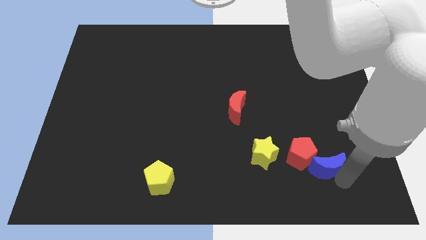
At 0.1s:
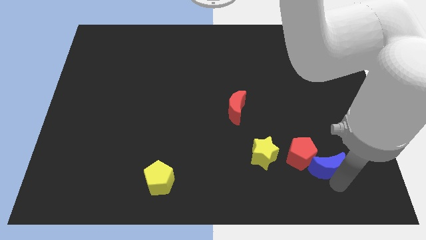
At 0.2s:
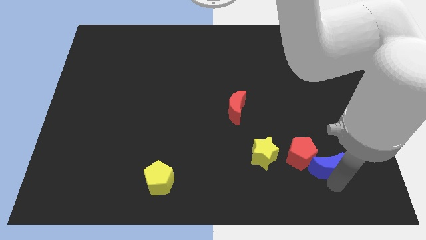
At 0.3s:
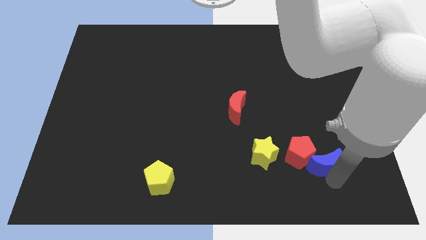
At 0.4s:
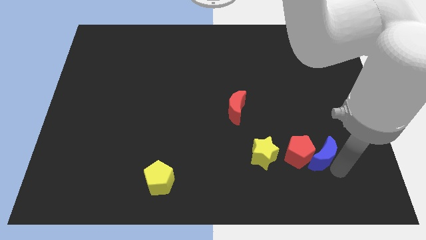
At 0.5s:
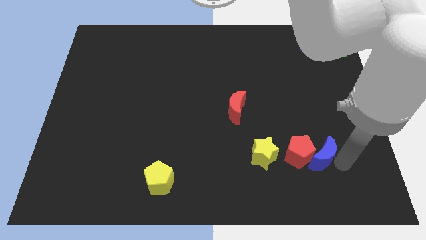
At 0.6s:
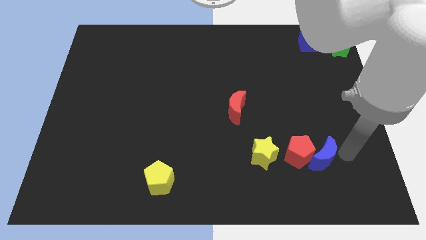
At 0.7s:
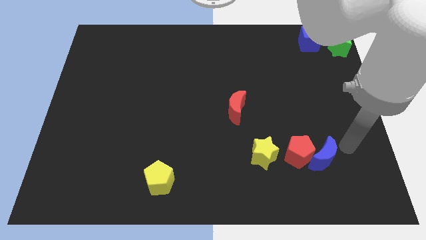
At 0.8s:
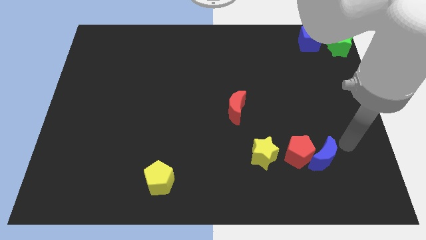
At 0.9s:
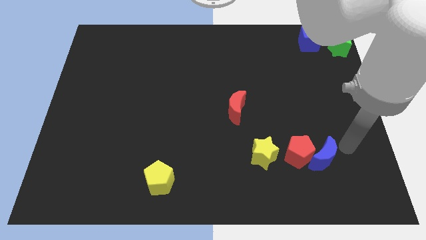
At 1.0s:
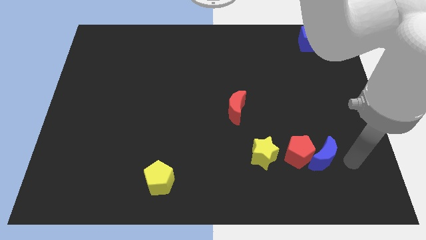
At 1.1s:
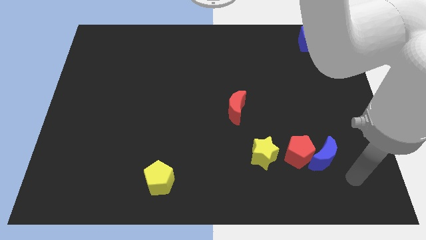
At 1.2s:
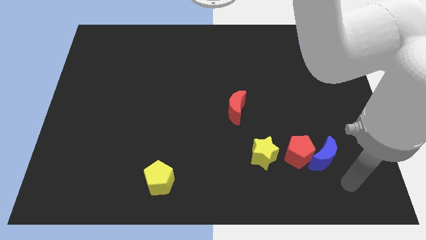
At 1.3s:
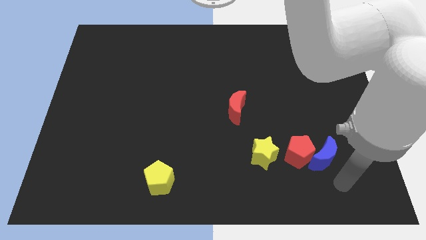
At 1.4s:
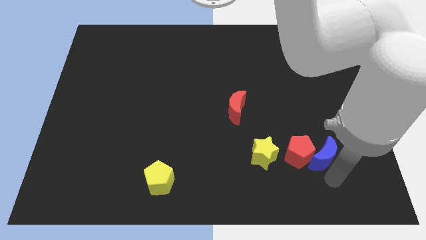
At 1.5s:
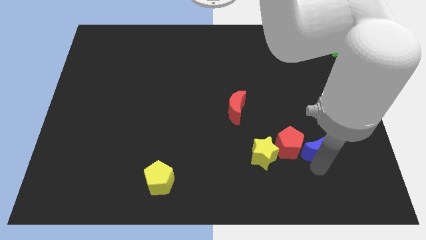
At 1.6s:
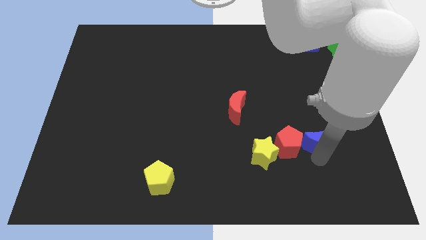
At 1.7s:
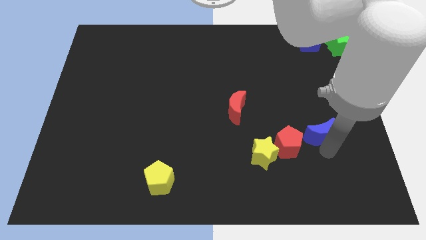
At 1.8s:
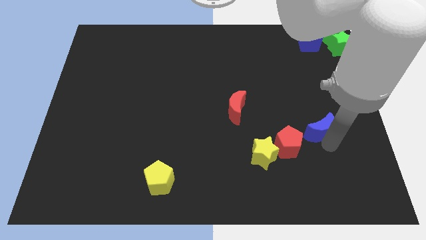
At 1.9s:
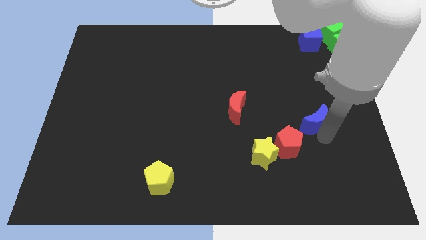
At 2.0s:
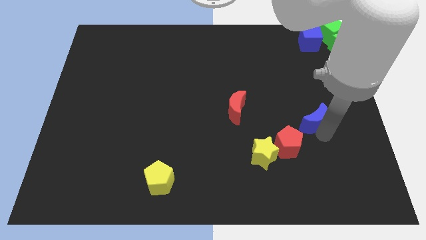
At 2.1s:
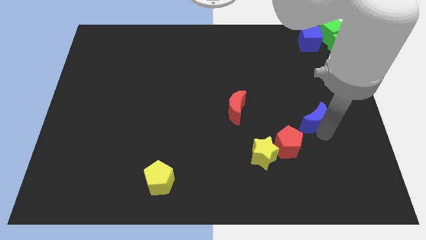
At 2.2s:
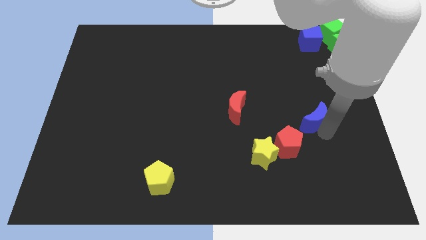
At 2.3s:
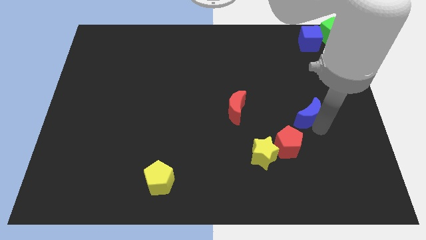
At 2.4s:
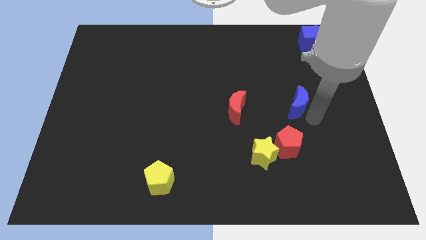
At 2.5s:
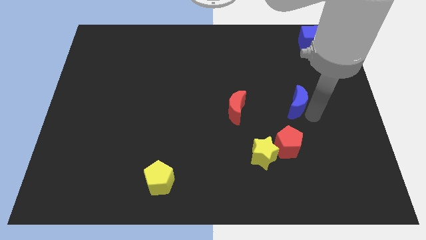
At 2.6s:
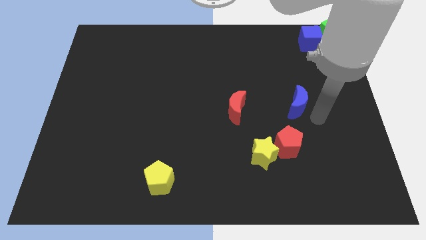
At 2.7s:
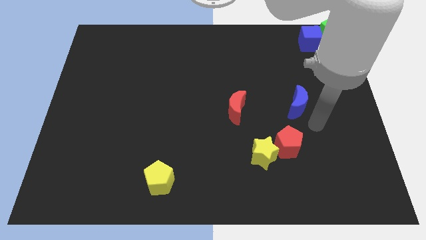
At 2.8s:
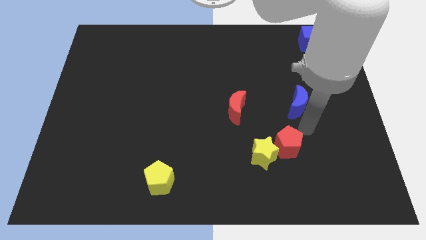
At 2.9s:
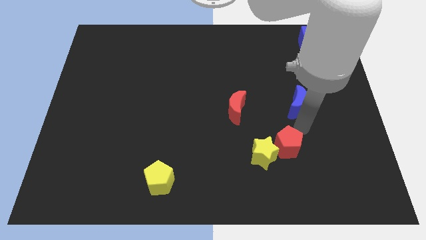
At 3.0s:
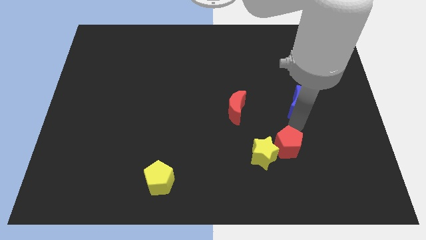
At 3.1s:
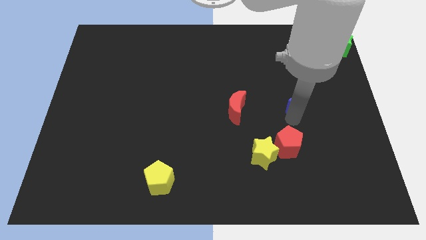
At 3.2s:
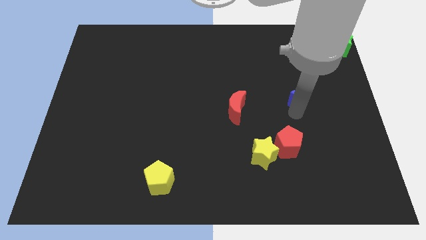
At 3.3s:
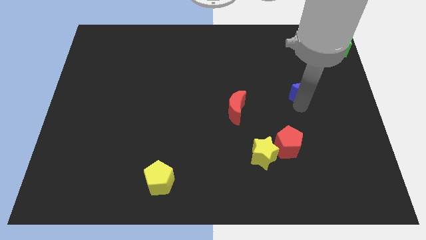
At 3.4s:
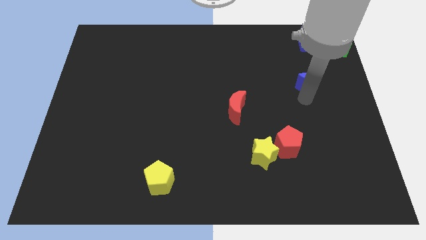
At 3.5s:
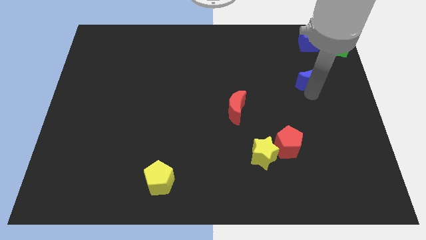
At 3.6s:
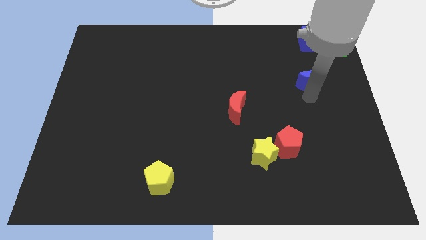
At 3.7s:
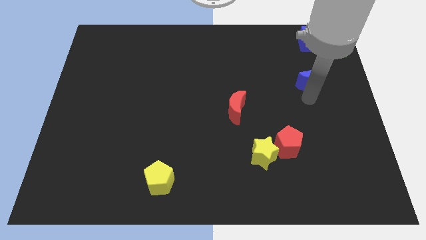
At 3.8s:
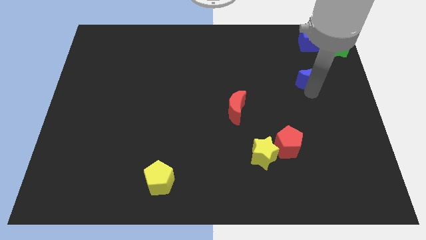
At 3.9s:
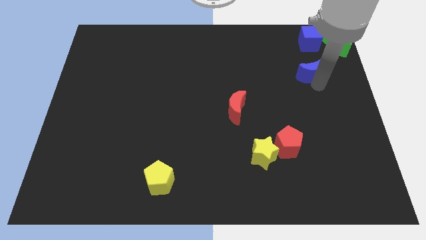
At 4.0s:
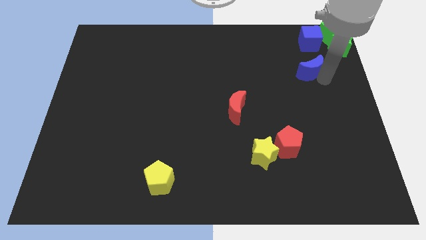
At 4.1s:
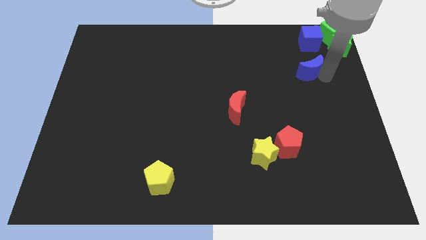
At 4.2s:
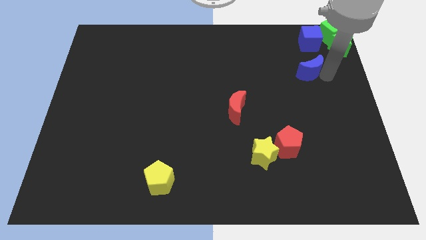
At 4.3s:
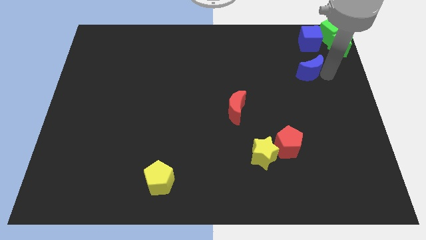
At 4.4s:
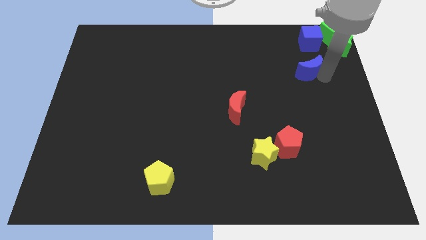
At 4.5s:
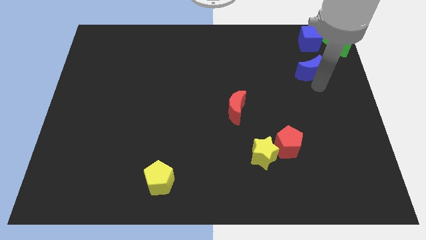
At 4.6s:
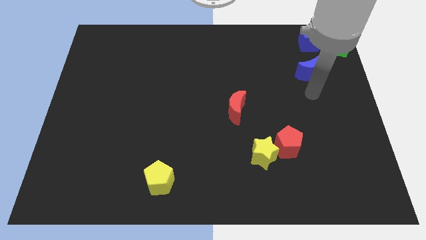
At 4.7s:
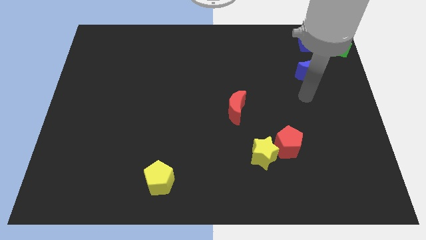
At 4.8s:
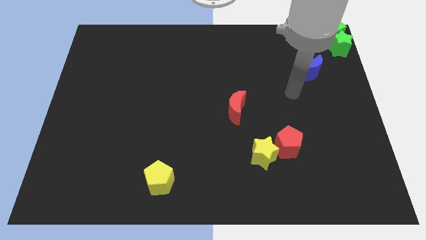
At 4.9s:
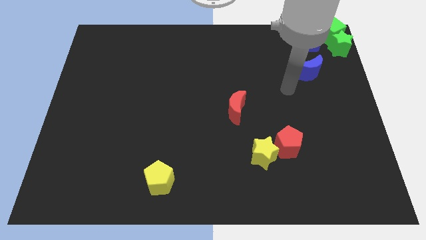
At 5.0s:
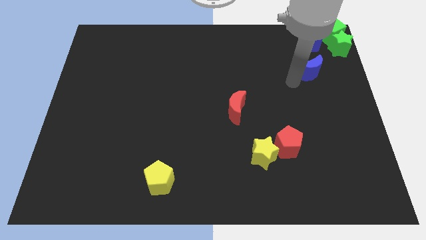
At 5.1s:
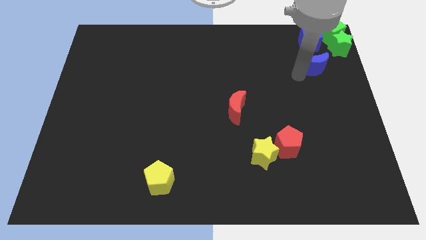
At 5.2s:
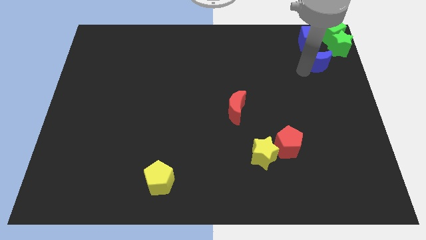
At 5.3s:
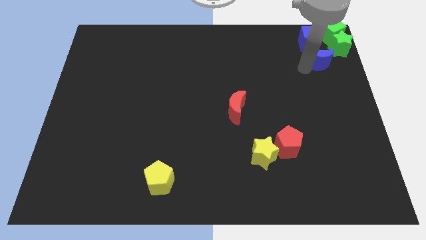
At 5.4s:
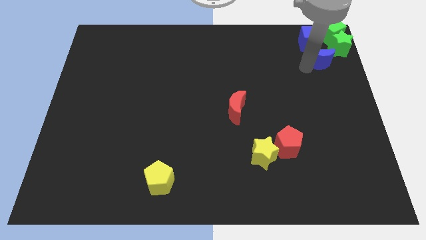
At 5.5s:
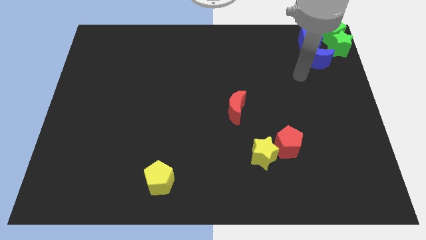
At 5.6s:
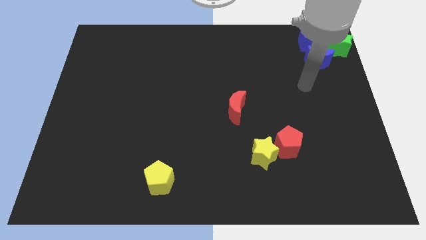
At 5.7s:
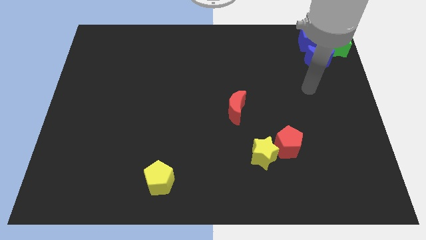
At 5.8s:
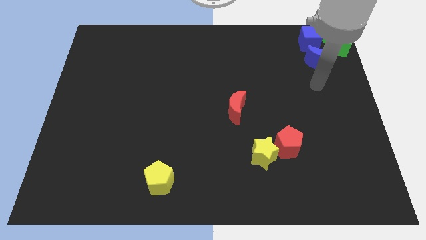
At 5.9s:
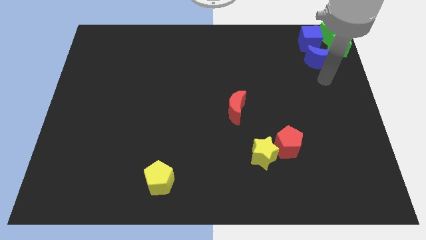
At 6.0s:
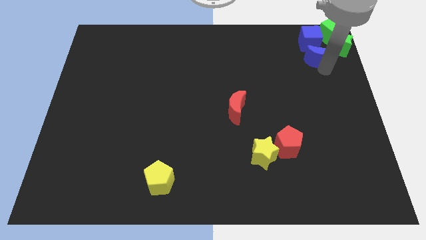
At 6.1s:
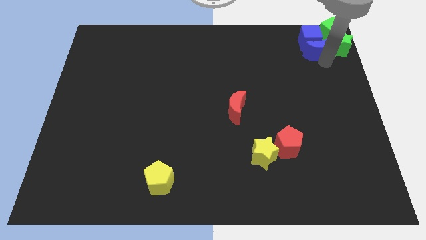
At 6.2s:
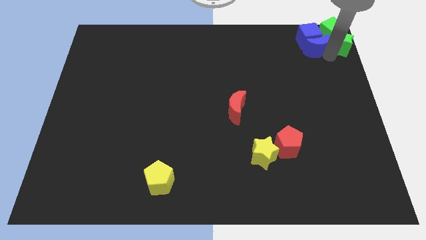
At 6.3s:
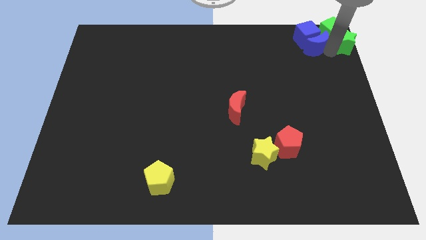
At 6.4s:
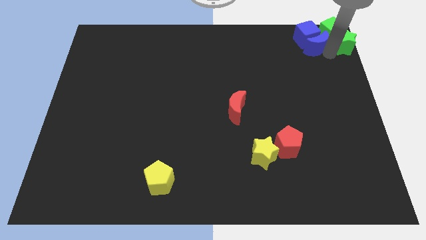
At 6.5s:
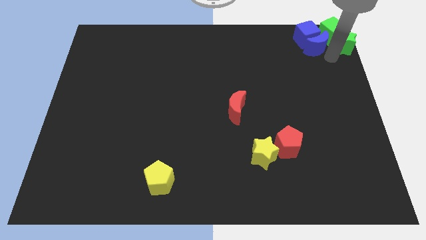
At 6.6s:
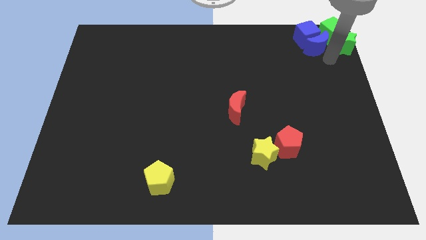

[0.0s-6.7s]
push the blue crescent to the top right

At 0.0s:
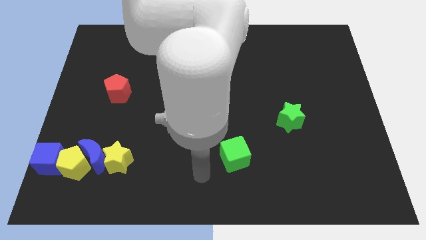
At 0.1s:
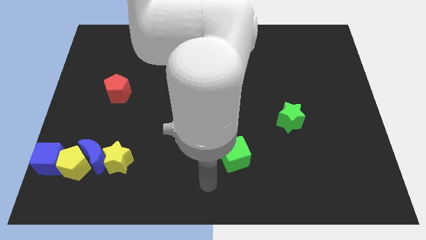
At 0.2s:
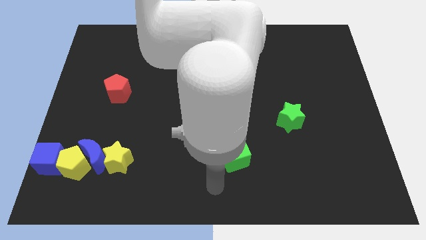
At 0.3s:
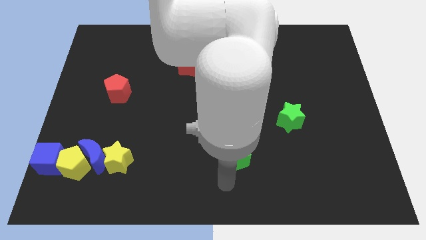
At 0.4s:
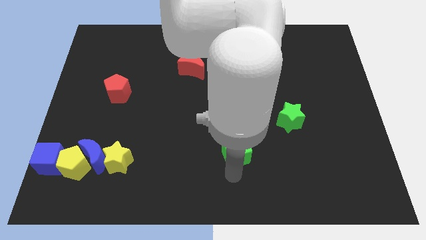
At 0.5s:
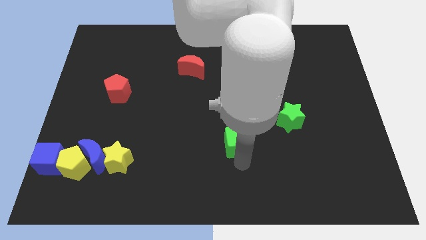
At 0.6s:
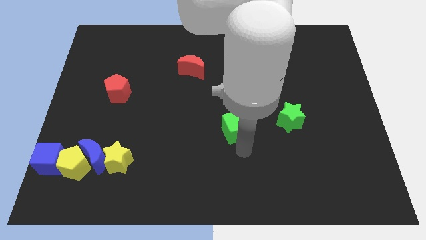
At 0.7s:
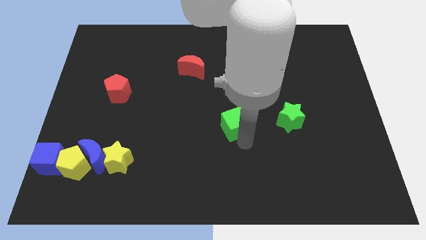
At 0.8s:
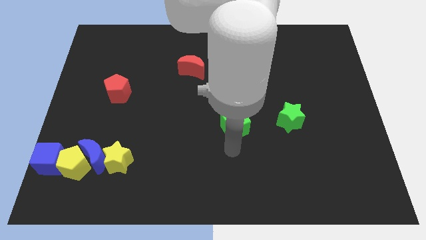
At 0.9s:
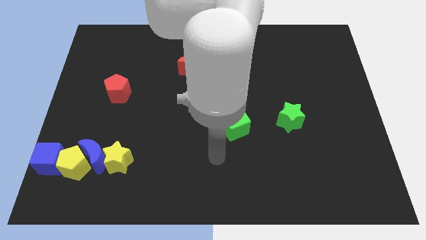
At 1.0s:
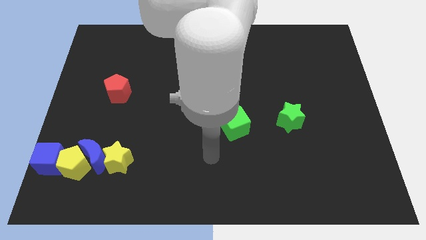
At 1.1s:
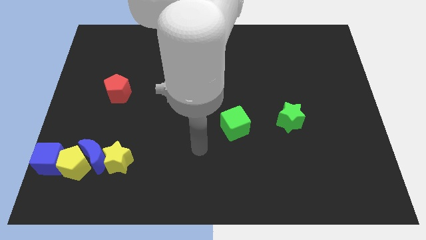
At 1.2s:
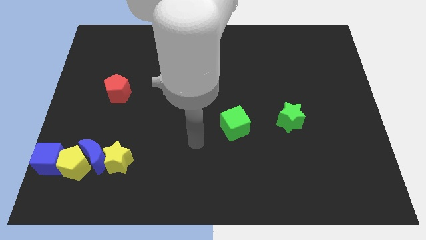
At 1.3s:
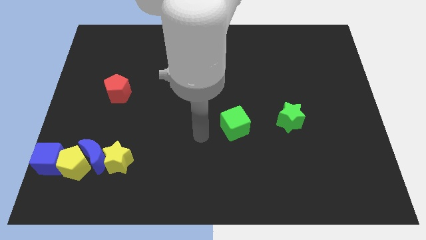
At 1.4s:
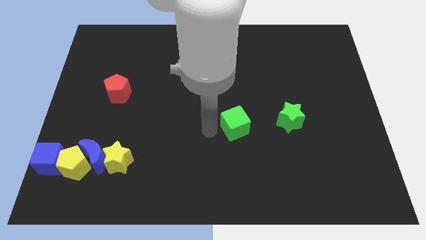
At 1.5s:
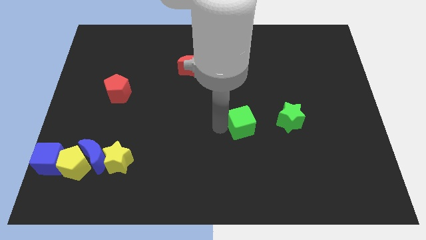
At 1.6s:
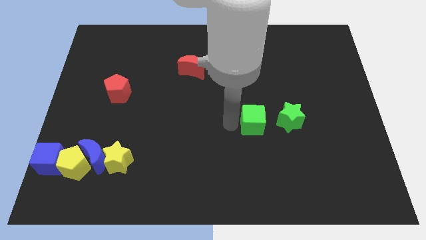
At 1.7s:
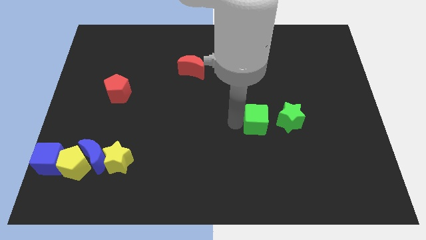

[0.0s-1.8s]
move the green cube left to the green star
